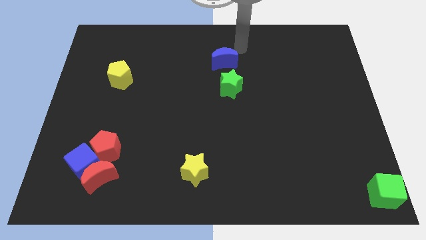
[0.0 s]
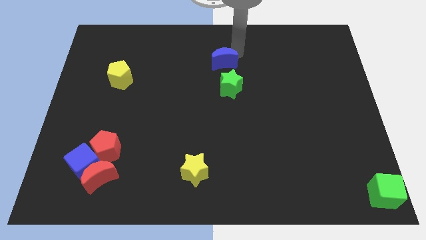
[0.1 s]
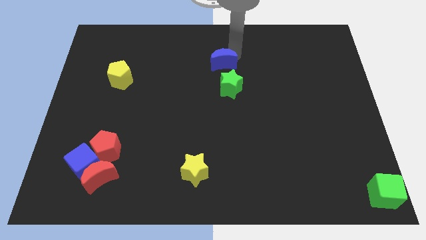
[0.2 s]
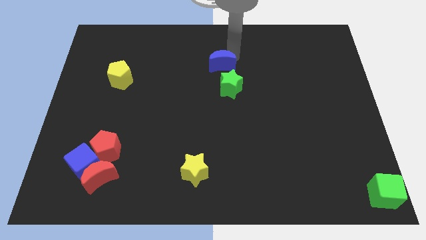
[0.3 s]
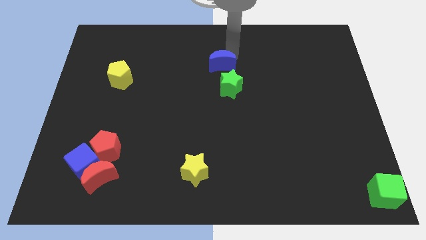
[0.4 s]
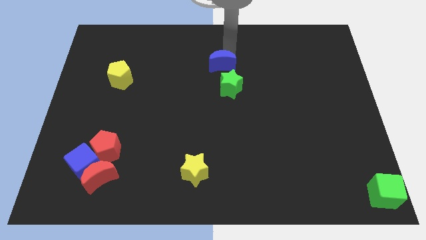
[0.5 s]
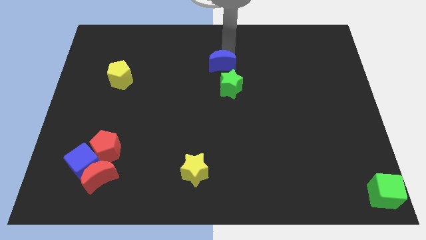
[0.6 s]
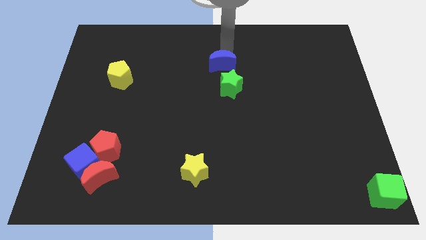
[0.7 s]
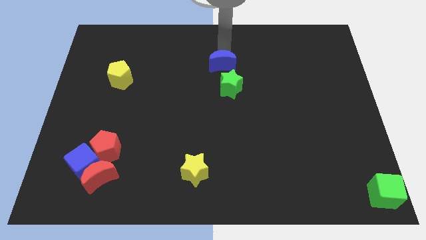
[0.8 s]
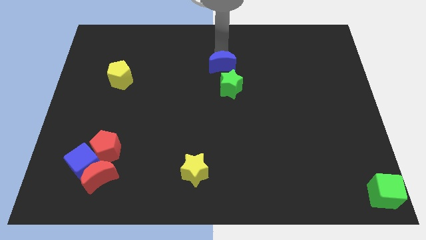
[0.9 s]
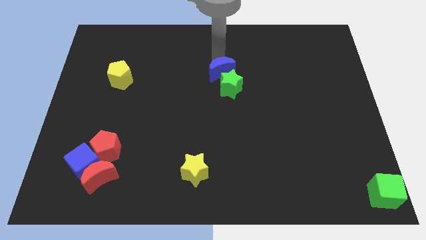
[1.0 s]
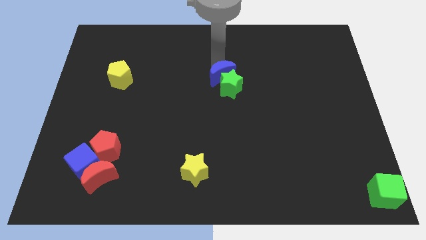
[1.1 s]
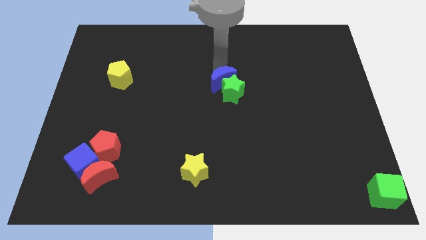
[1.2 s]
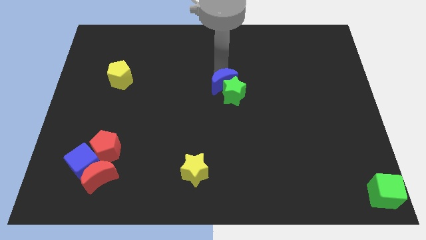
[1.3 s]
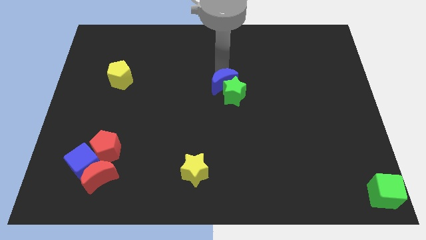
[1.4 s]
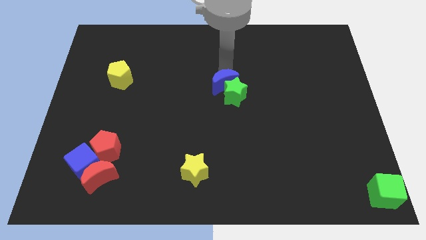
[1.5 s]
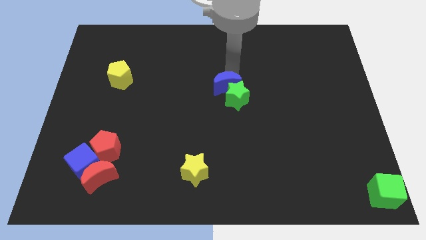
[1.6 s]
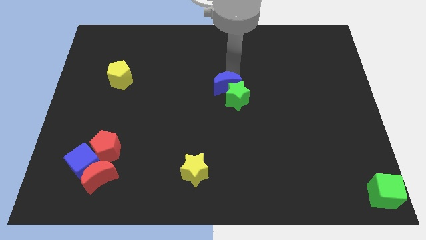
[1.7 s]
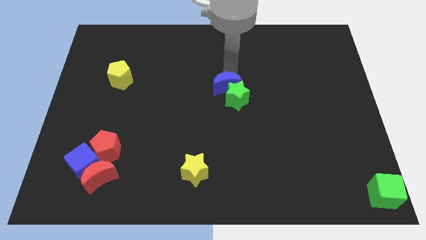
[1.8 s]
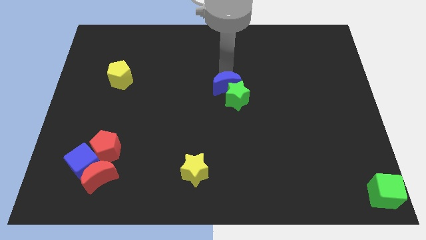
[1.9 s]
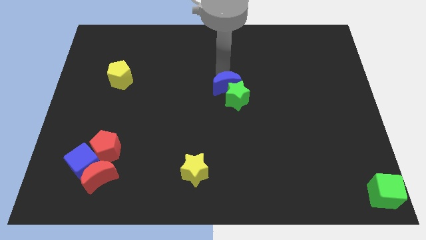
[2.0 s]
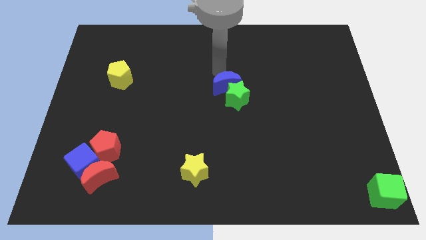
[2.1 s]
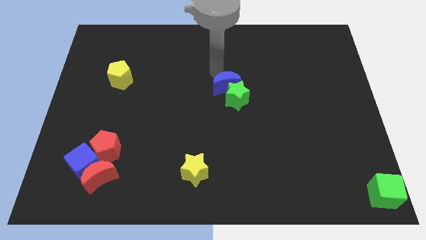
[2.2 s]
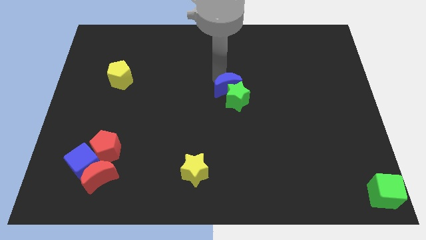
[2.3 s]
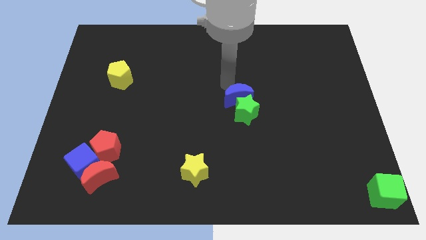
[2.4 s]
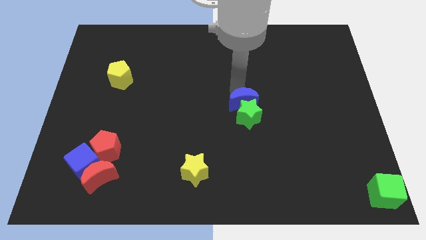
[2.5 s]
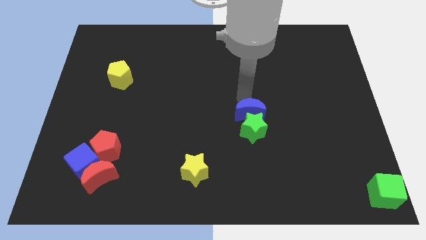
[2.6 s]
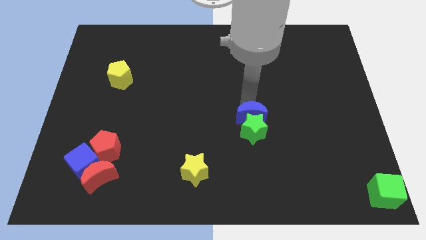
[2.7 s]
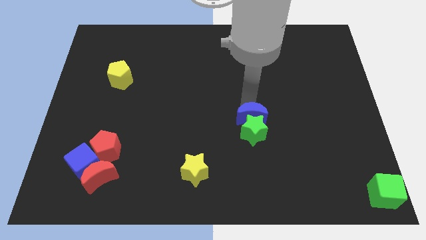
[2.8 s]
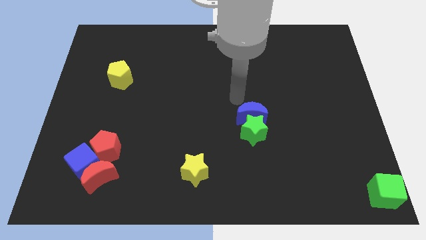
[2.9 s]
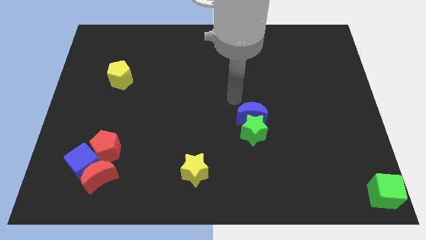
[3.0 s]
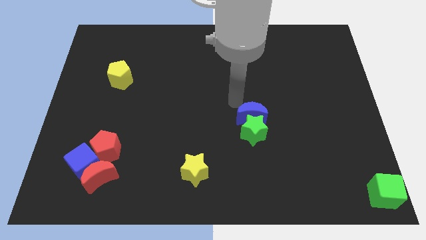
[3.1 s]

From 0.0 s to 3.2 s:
move the green star with the blue crescent

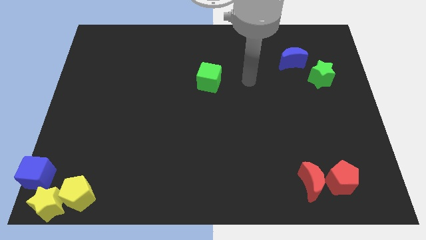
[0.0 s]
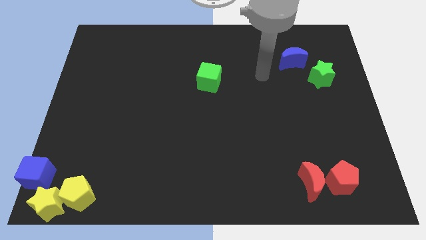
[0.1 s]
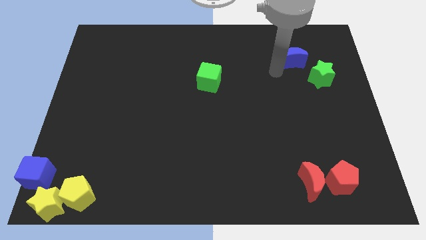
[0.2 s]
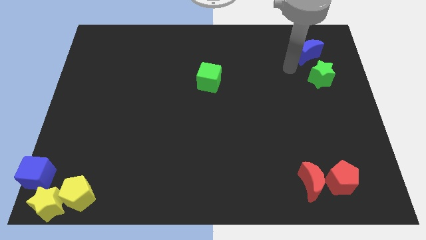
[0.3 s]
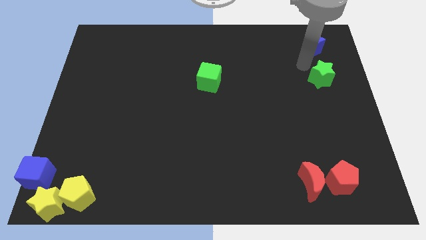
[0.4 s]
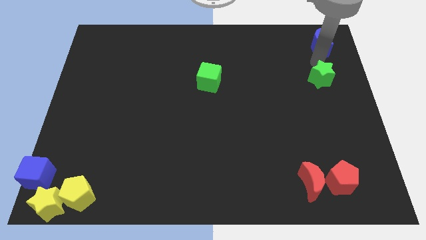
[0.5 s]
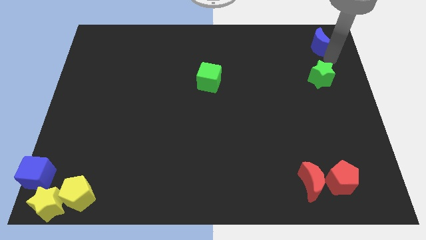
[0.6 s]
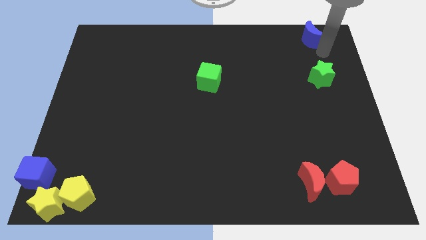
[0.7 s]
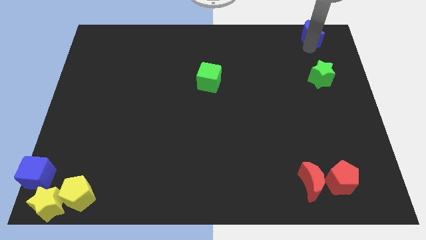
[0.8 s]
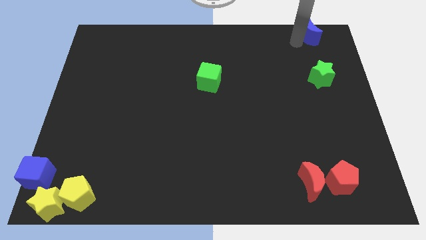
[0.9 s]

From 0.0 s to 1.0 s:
separate blue crescent from green star

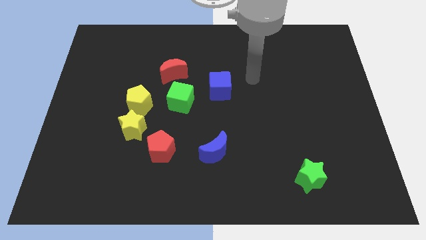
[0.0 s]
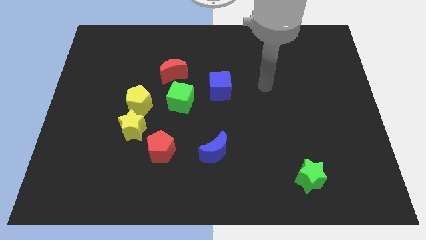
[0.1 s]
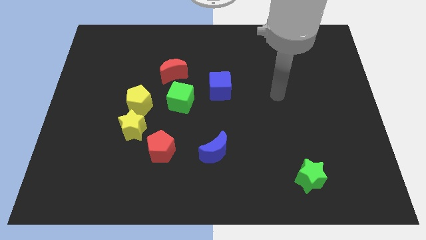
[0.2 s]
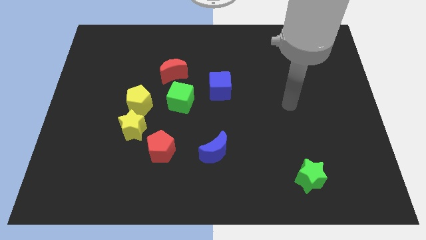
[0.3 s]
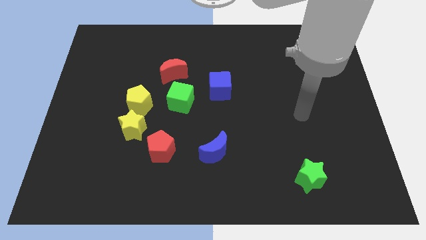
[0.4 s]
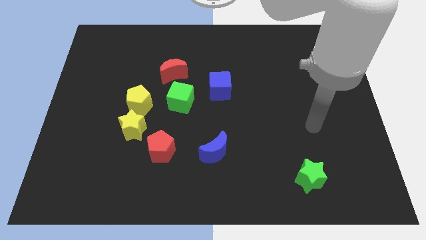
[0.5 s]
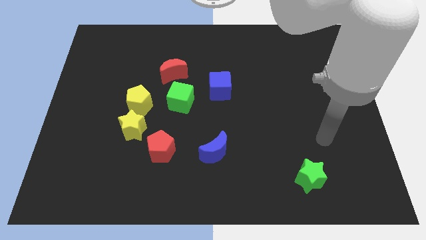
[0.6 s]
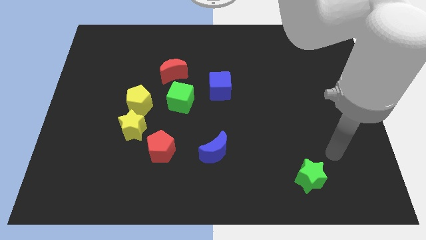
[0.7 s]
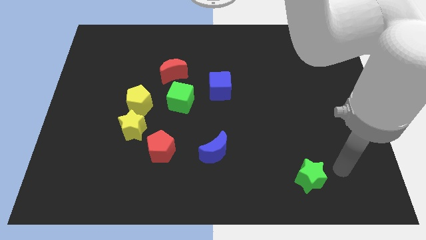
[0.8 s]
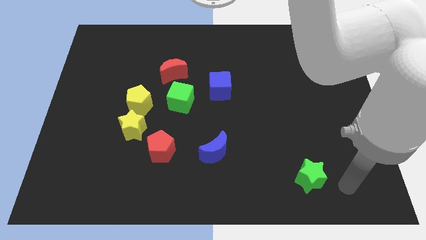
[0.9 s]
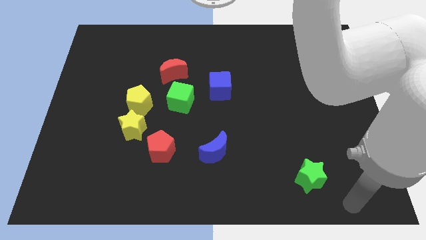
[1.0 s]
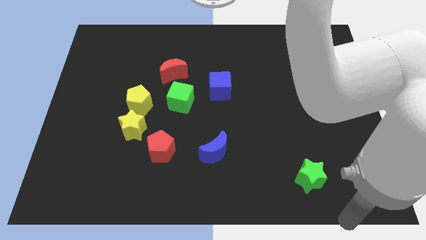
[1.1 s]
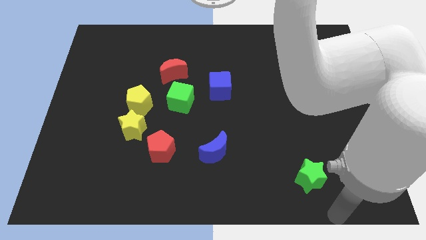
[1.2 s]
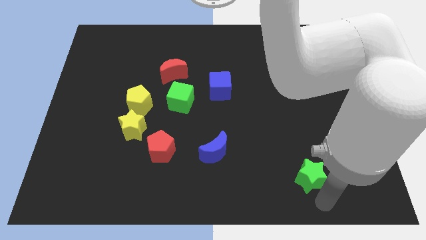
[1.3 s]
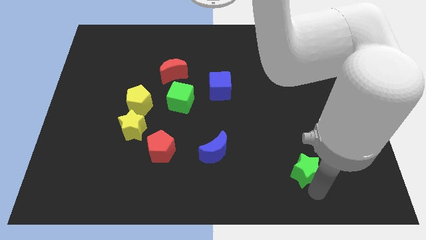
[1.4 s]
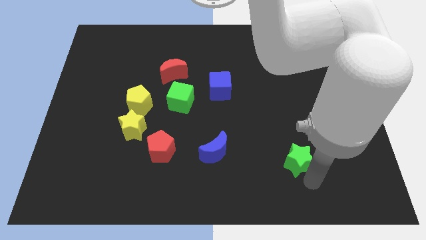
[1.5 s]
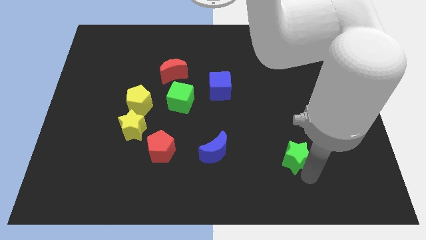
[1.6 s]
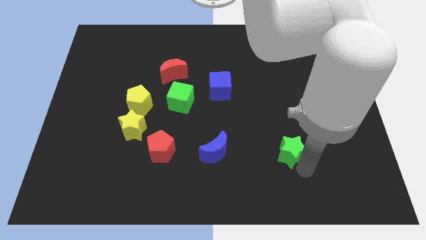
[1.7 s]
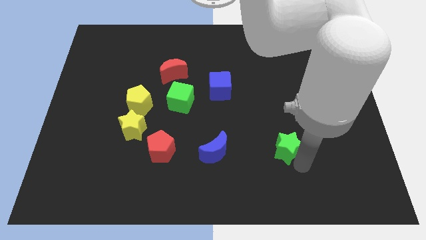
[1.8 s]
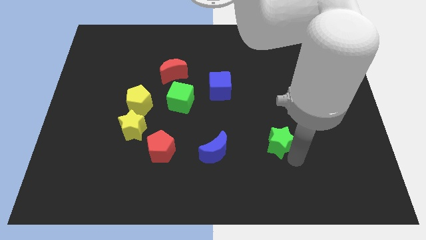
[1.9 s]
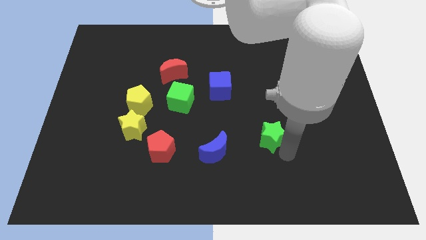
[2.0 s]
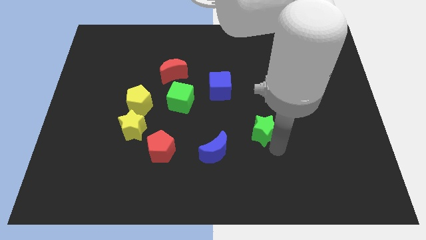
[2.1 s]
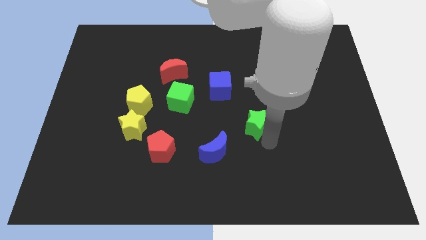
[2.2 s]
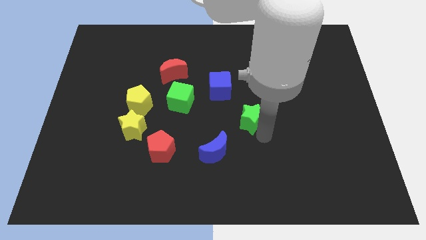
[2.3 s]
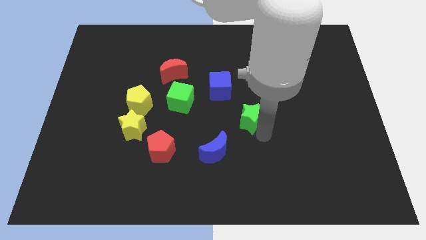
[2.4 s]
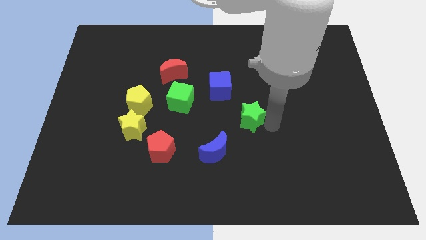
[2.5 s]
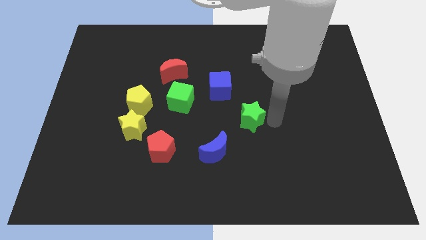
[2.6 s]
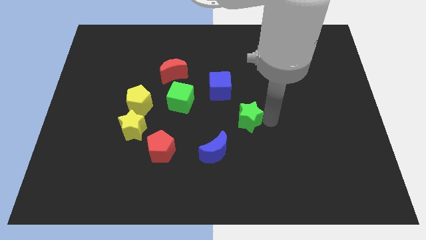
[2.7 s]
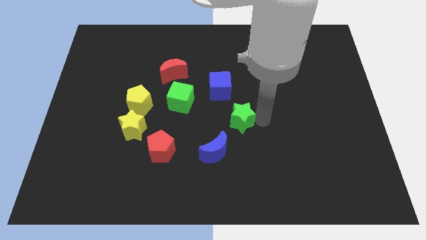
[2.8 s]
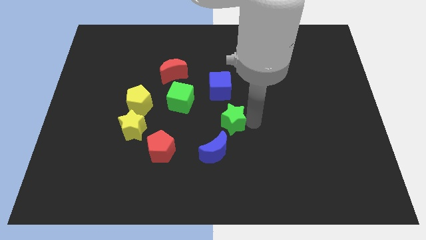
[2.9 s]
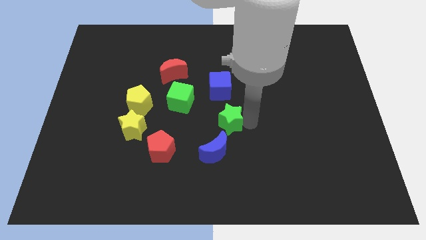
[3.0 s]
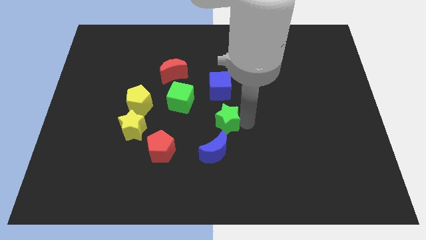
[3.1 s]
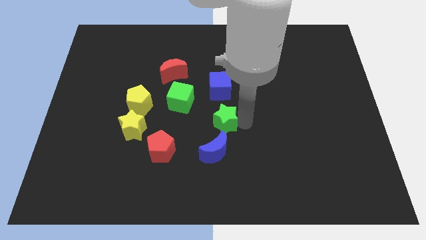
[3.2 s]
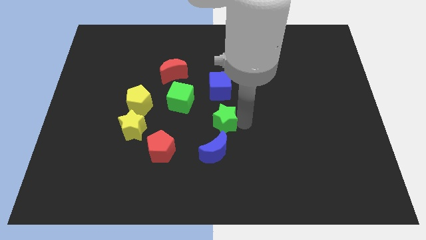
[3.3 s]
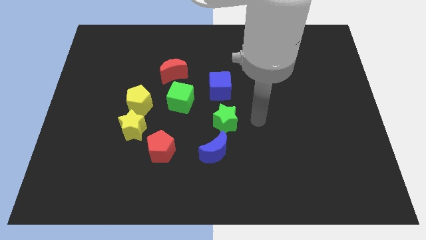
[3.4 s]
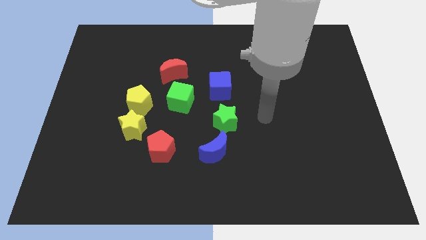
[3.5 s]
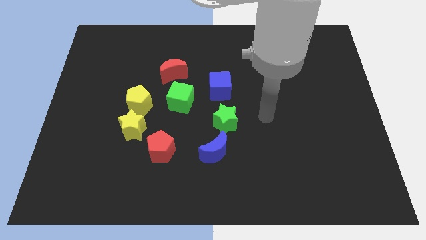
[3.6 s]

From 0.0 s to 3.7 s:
place the green star in between blue cube and blue moon

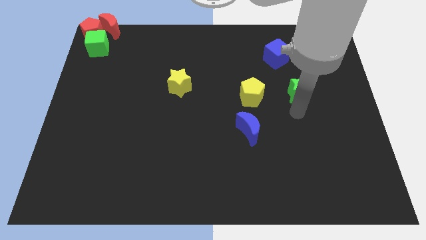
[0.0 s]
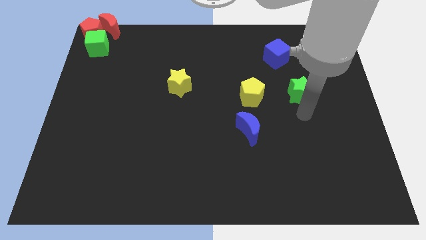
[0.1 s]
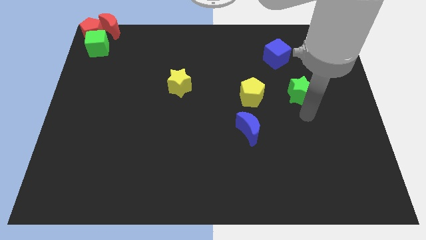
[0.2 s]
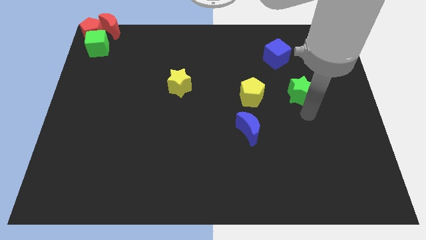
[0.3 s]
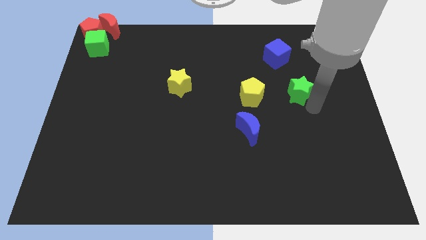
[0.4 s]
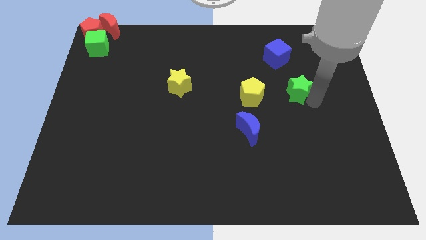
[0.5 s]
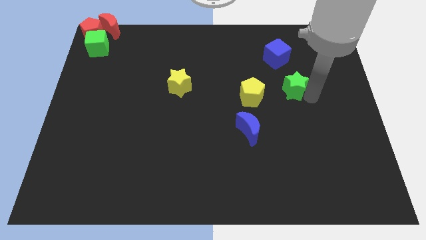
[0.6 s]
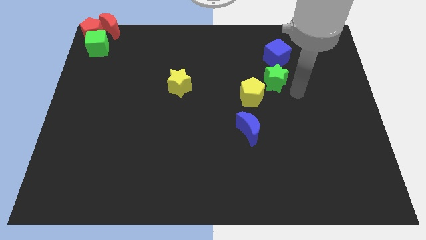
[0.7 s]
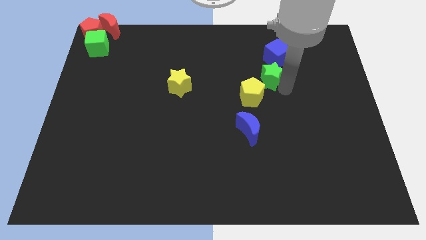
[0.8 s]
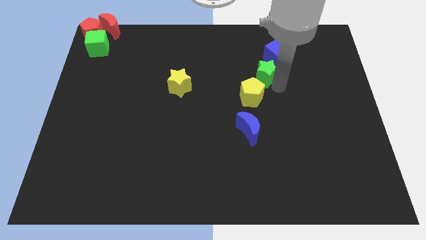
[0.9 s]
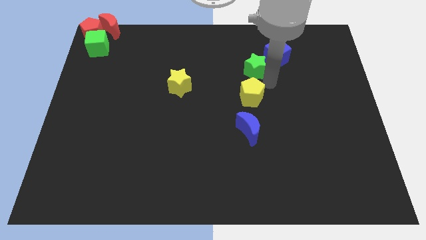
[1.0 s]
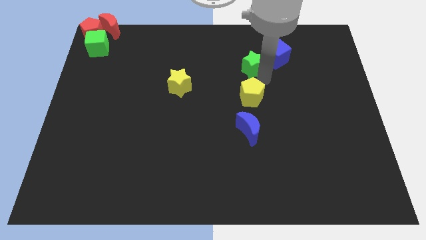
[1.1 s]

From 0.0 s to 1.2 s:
place the green star above the yellow pentagon

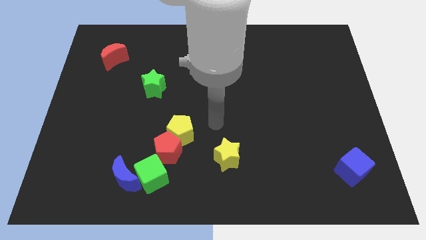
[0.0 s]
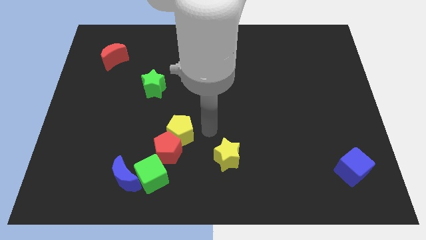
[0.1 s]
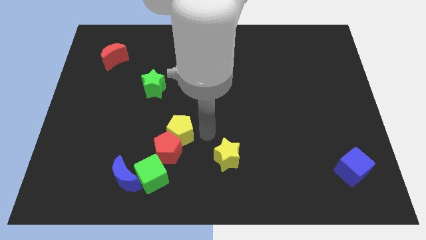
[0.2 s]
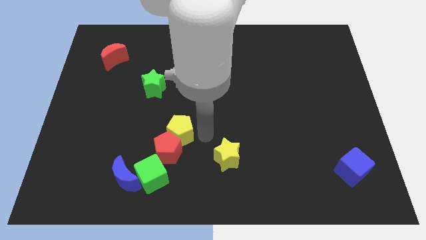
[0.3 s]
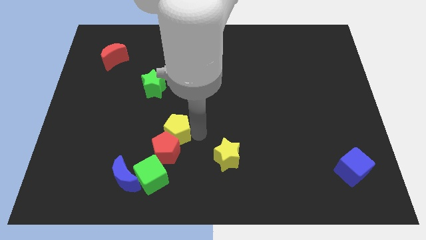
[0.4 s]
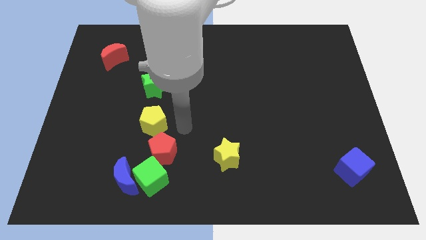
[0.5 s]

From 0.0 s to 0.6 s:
place the yellow pentagon in between the green star and red pentagon
